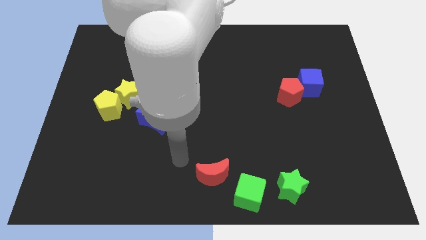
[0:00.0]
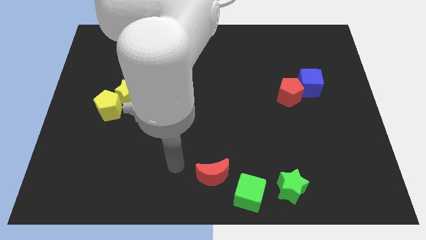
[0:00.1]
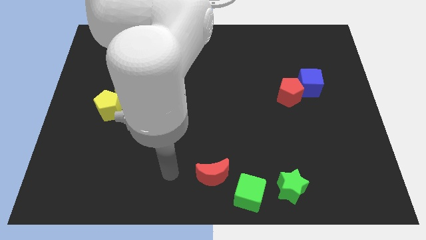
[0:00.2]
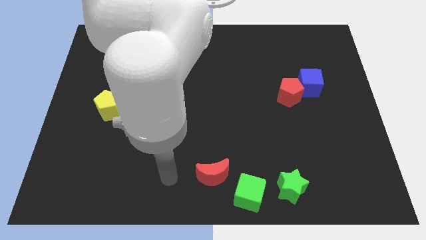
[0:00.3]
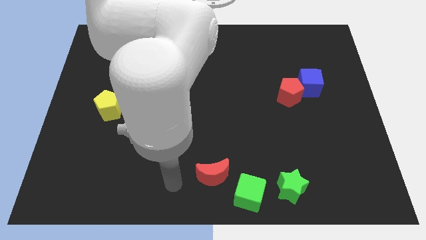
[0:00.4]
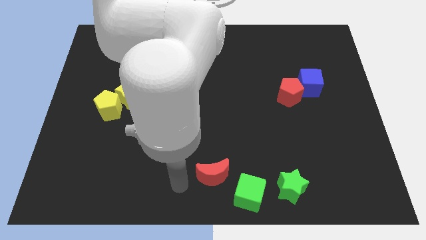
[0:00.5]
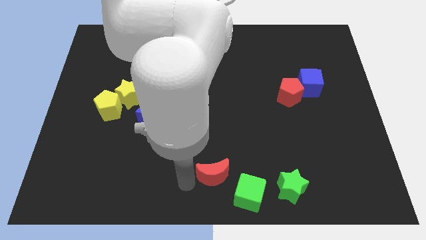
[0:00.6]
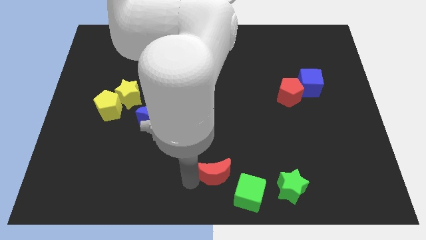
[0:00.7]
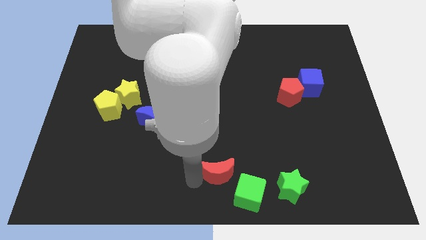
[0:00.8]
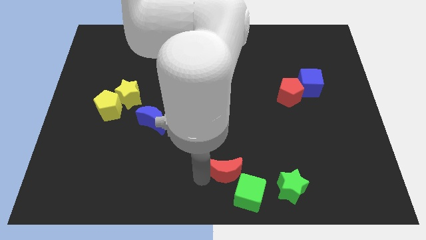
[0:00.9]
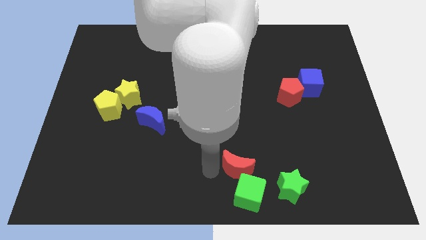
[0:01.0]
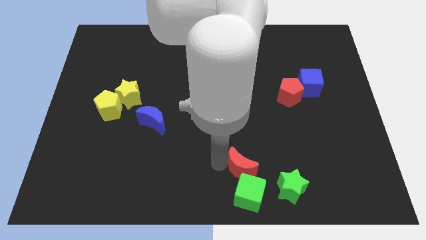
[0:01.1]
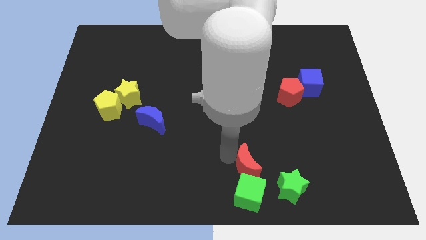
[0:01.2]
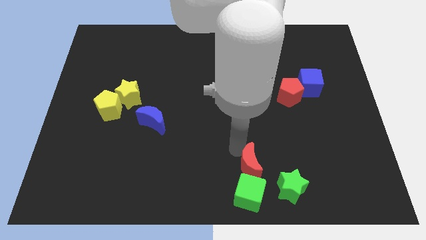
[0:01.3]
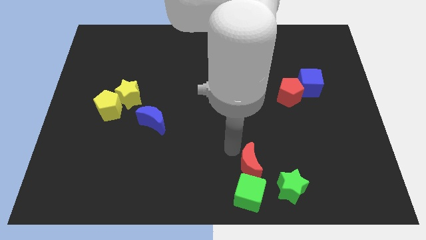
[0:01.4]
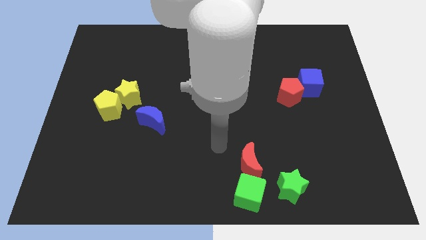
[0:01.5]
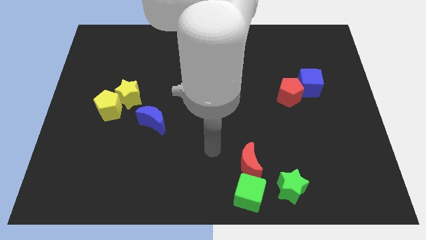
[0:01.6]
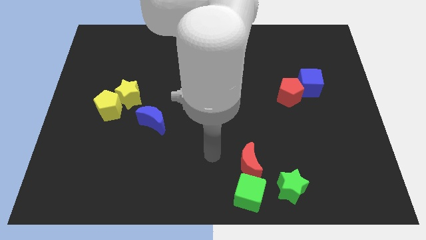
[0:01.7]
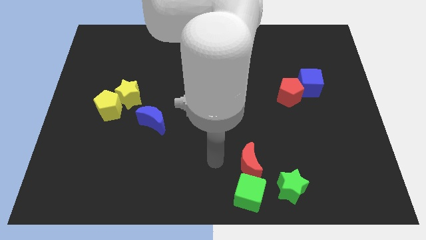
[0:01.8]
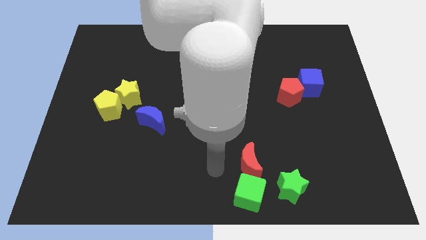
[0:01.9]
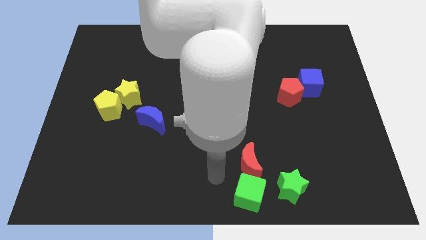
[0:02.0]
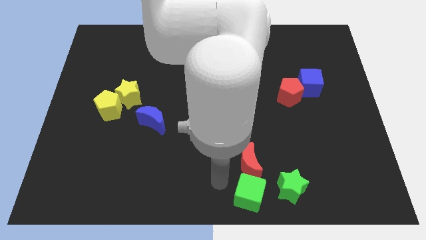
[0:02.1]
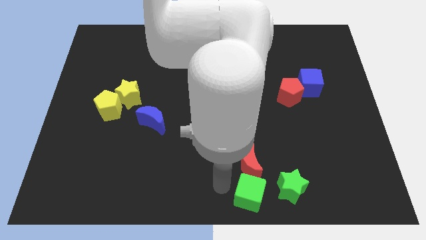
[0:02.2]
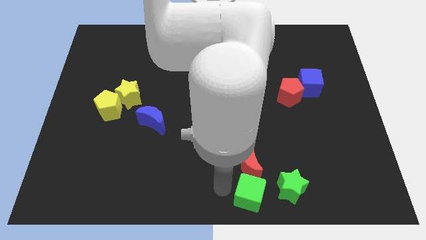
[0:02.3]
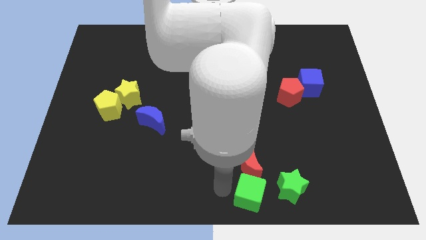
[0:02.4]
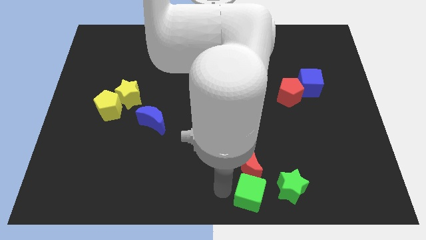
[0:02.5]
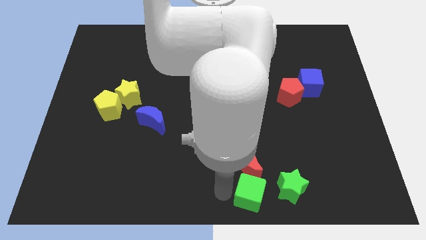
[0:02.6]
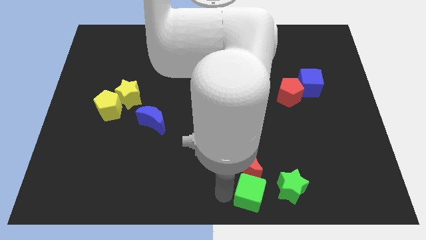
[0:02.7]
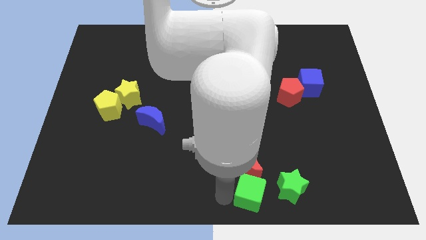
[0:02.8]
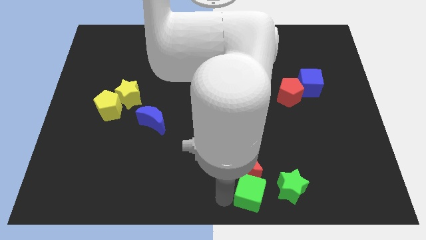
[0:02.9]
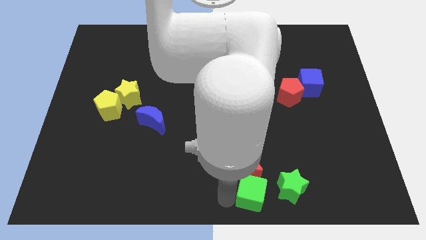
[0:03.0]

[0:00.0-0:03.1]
place the red crescent to the top of the green cube

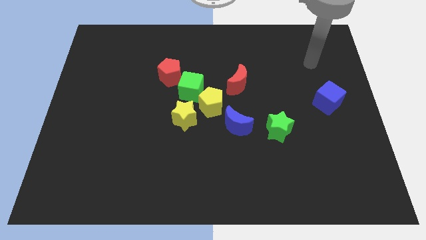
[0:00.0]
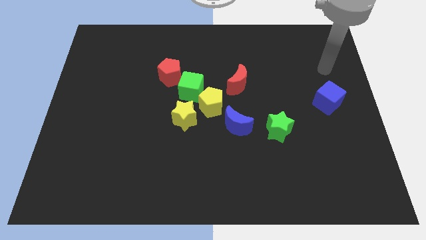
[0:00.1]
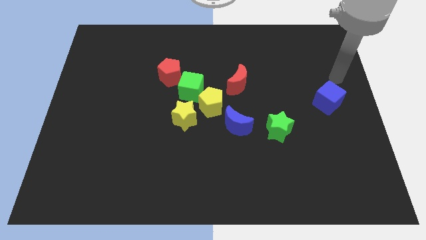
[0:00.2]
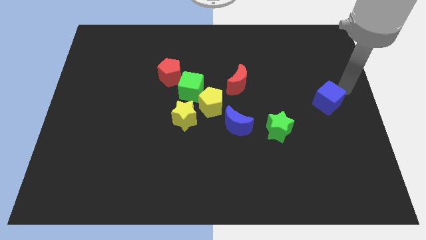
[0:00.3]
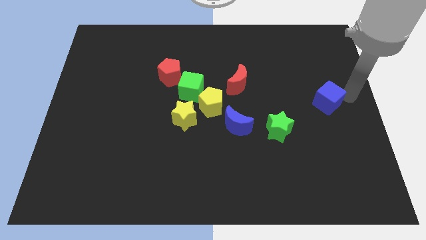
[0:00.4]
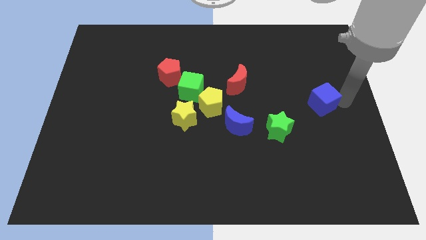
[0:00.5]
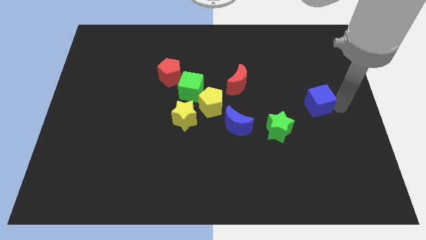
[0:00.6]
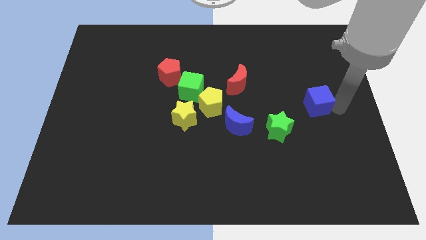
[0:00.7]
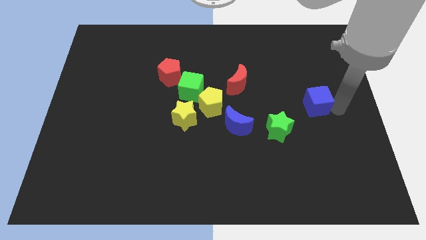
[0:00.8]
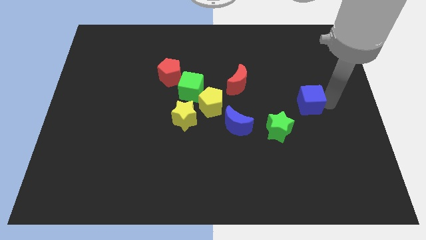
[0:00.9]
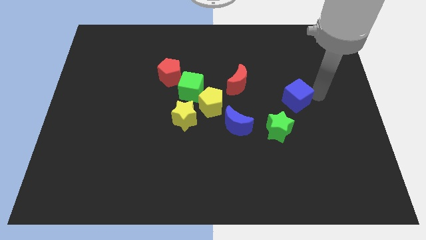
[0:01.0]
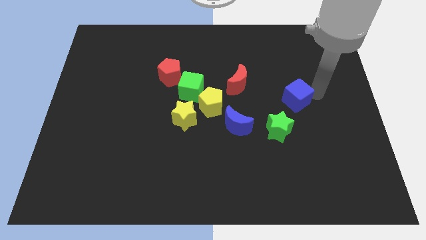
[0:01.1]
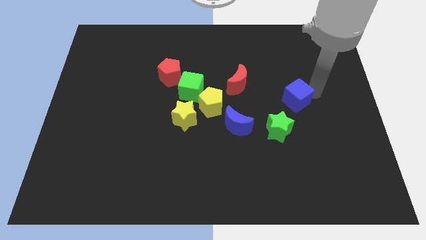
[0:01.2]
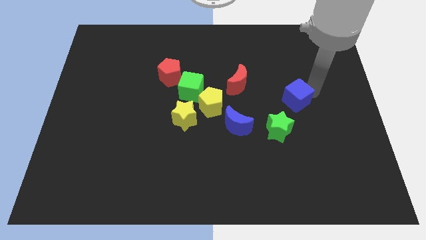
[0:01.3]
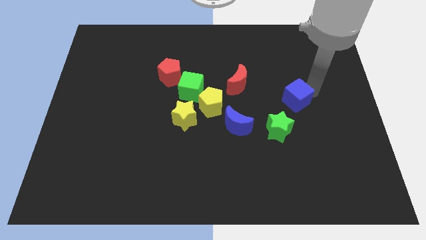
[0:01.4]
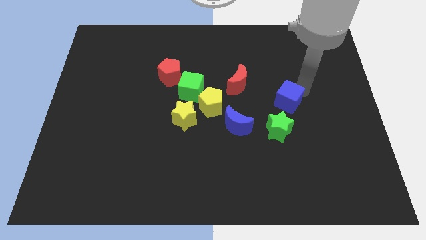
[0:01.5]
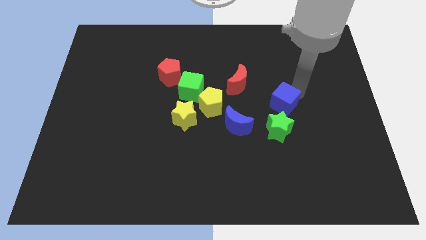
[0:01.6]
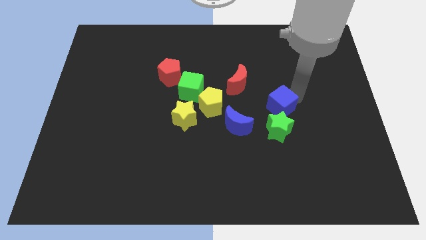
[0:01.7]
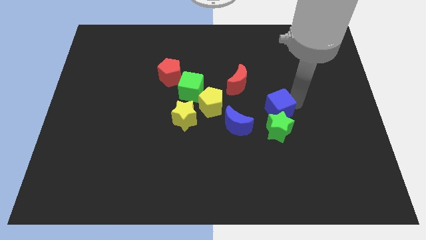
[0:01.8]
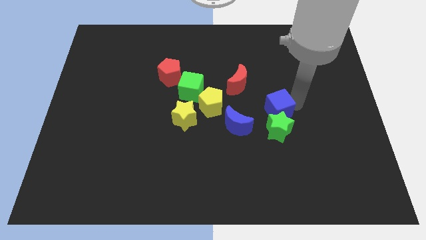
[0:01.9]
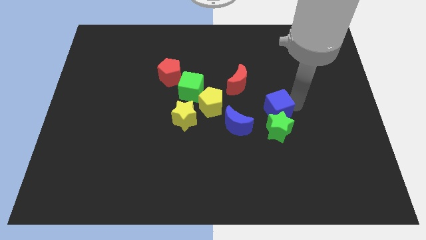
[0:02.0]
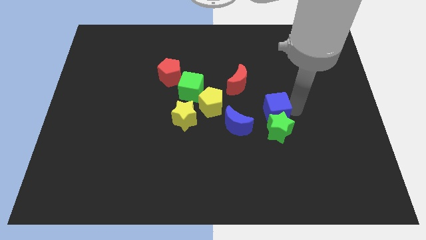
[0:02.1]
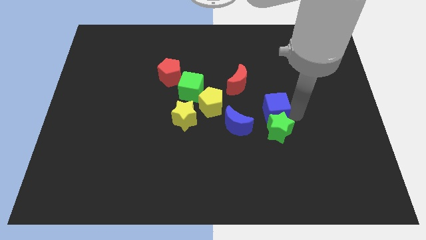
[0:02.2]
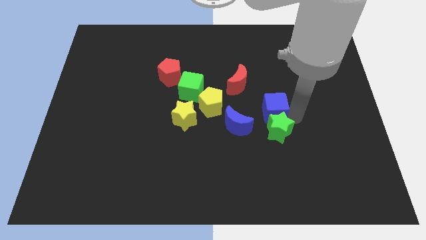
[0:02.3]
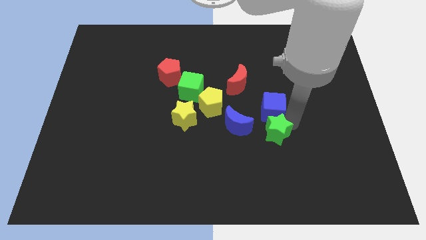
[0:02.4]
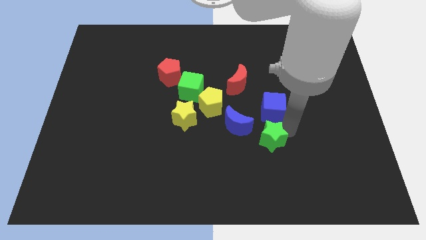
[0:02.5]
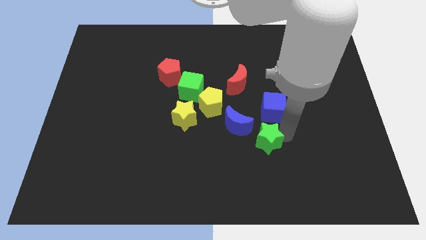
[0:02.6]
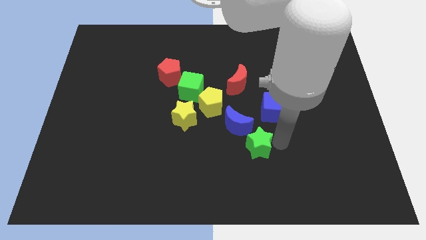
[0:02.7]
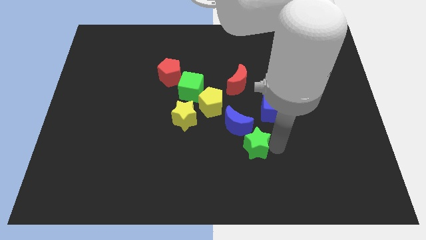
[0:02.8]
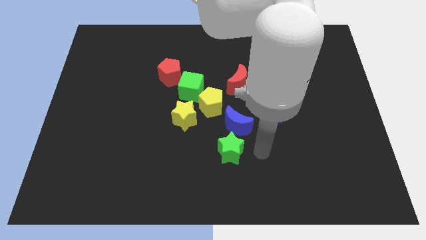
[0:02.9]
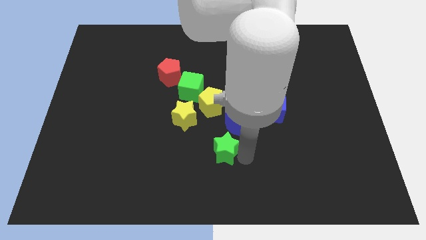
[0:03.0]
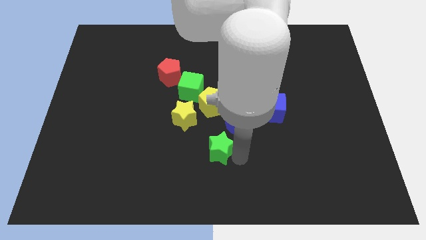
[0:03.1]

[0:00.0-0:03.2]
push the blue cube towards the right of the blue crescent

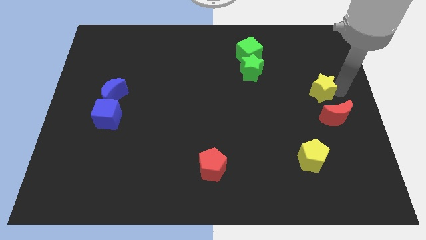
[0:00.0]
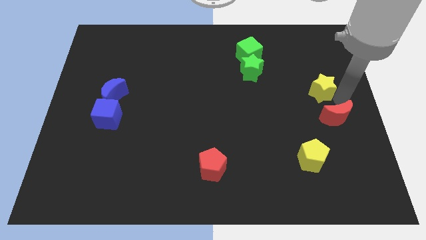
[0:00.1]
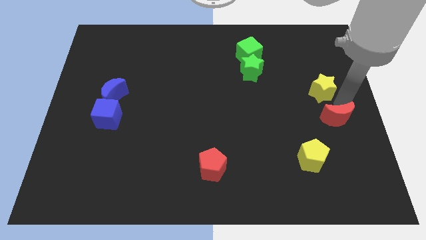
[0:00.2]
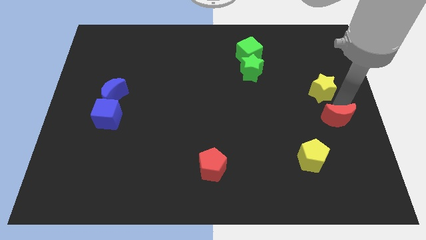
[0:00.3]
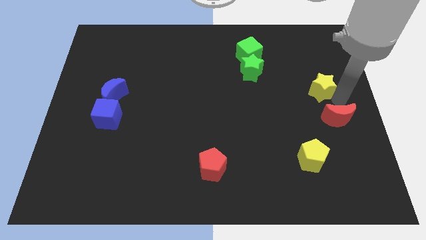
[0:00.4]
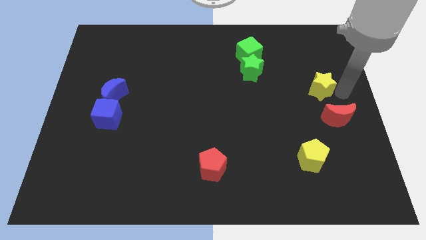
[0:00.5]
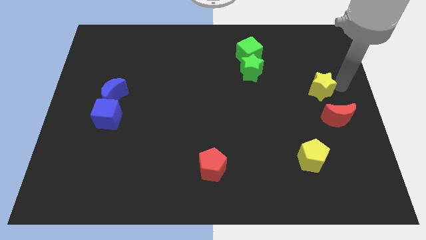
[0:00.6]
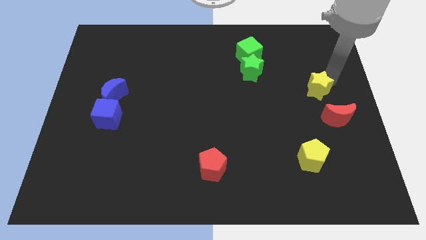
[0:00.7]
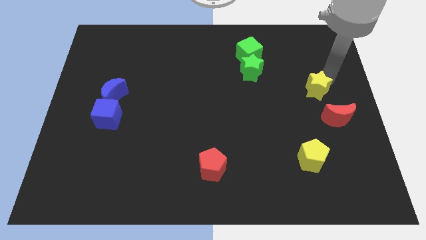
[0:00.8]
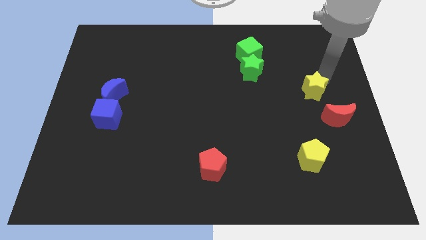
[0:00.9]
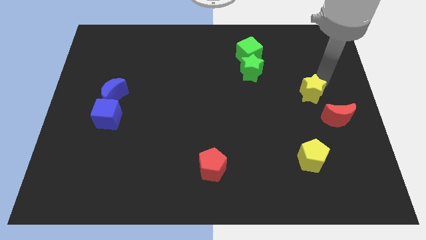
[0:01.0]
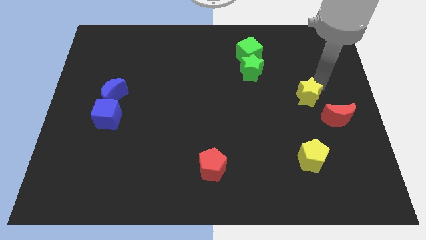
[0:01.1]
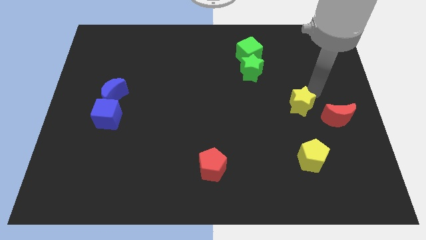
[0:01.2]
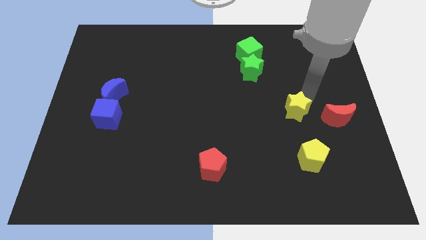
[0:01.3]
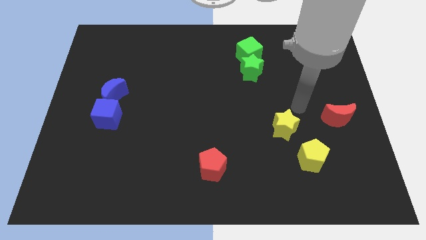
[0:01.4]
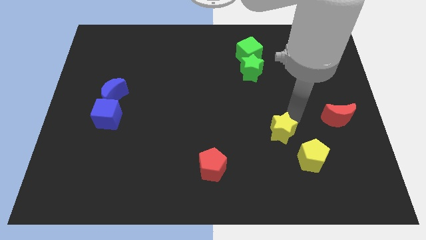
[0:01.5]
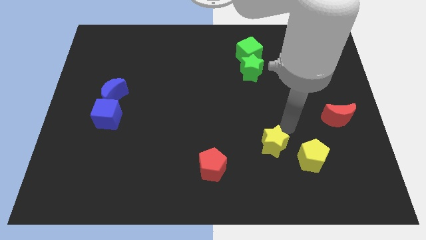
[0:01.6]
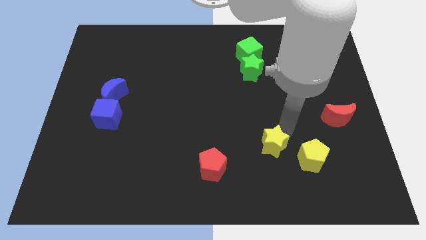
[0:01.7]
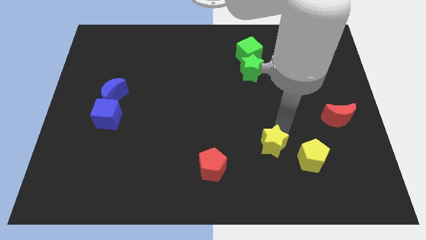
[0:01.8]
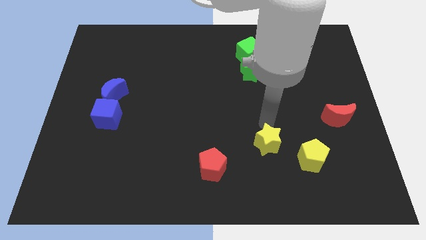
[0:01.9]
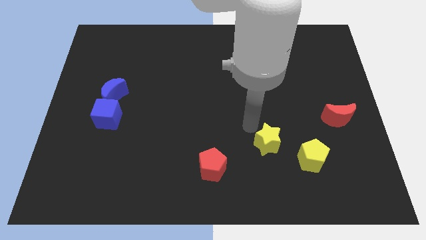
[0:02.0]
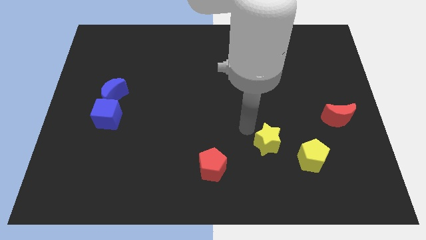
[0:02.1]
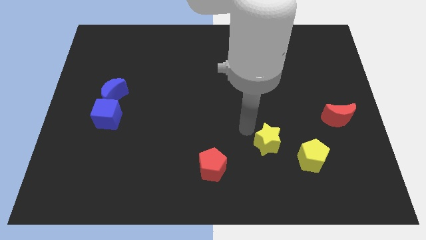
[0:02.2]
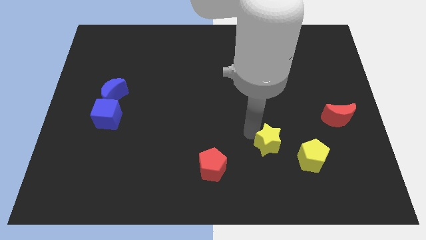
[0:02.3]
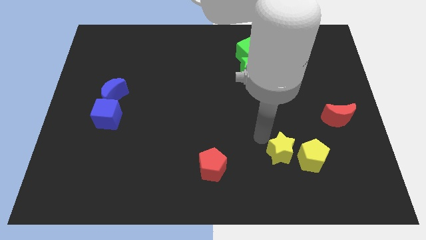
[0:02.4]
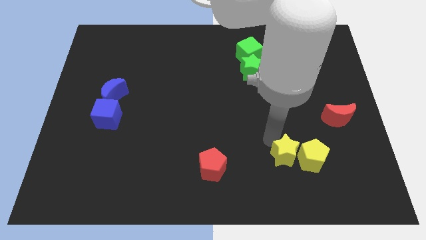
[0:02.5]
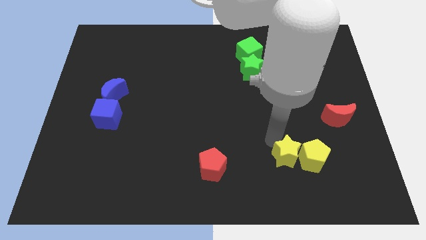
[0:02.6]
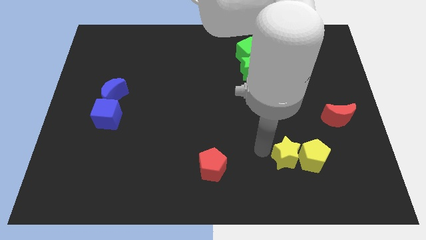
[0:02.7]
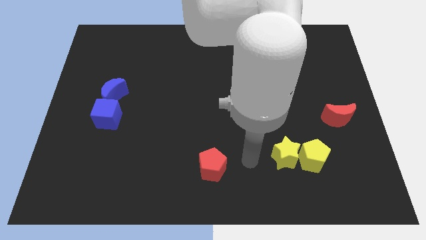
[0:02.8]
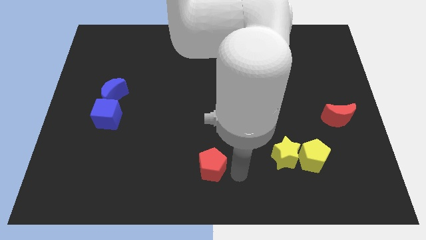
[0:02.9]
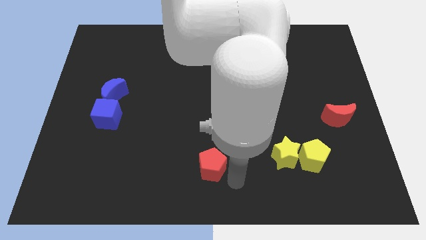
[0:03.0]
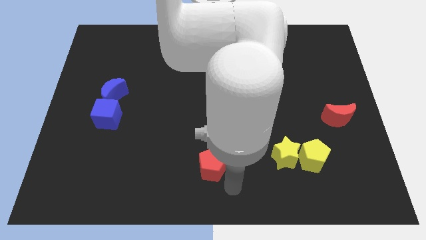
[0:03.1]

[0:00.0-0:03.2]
move the yellow star to the left of the yellow pentagon
